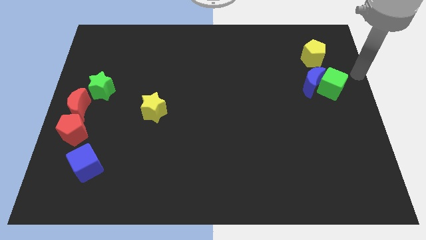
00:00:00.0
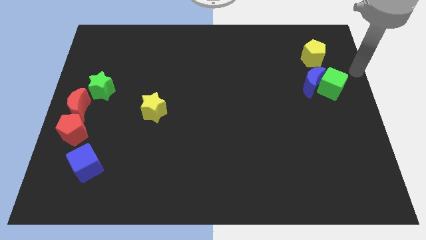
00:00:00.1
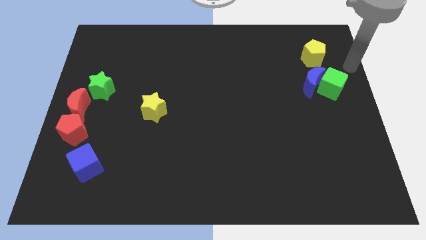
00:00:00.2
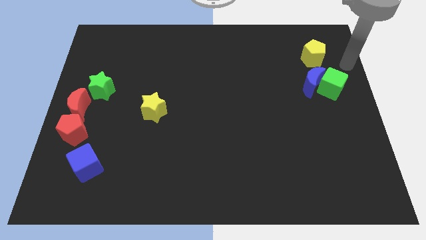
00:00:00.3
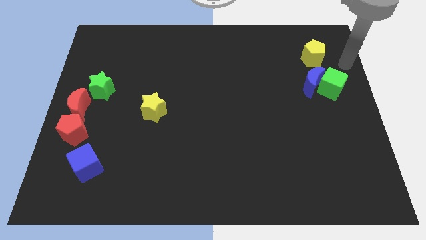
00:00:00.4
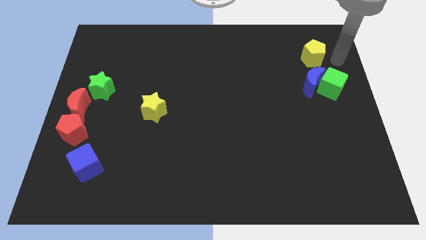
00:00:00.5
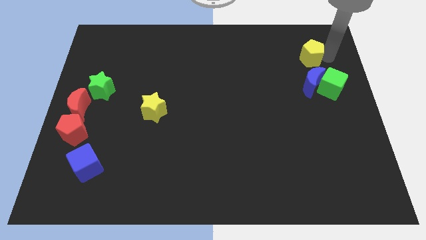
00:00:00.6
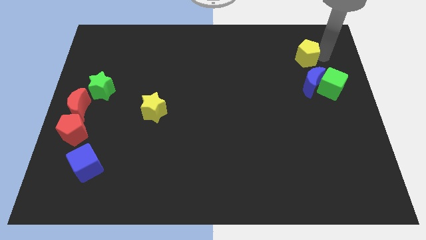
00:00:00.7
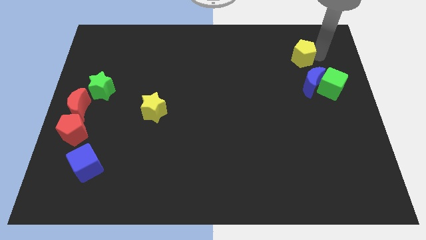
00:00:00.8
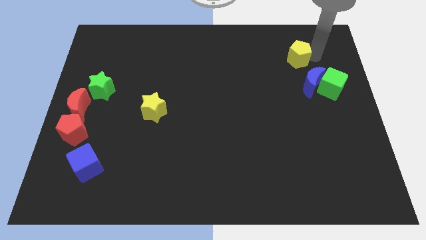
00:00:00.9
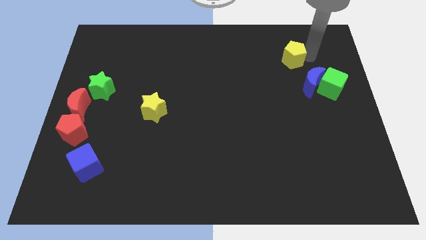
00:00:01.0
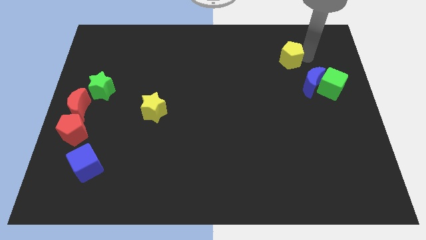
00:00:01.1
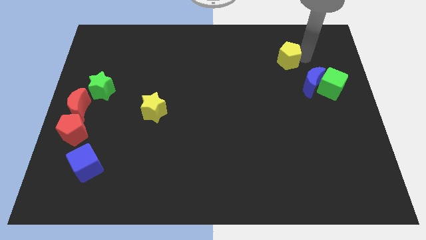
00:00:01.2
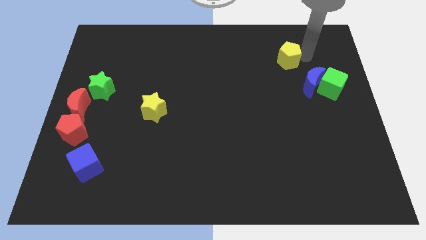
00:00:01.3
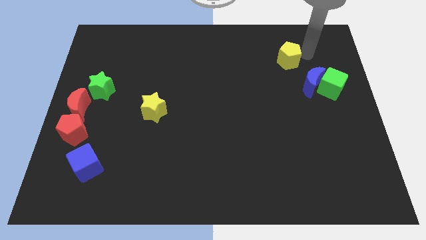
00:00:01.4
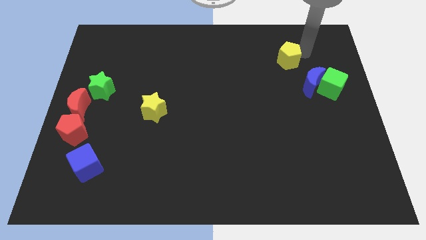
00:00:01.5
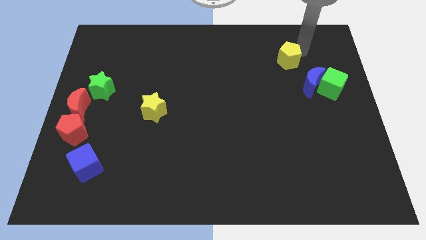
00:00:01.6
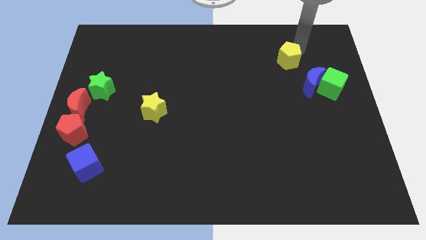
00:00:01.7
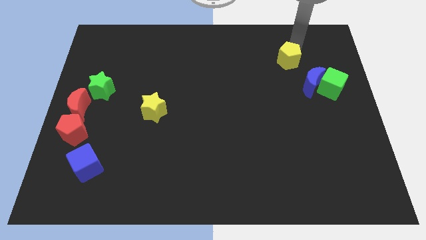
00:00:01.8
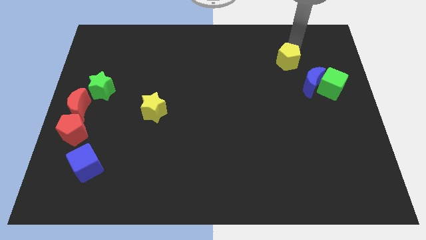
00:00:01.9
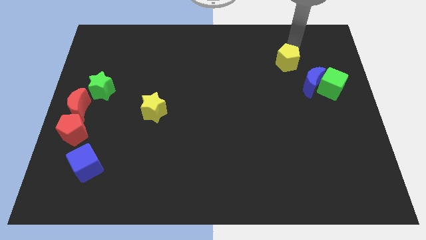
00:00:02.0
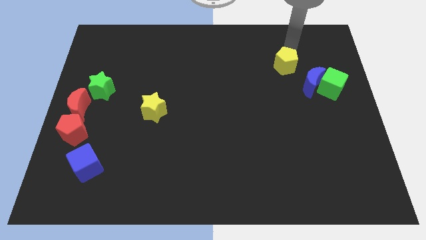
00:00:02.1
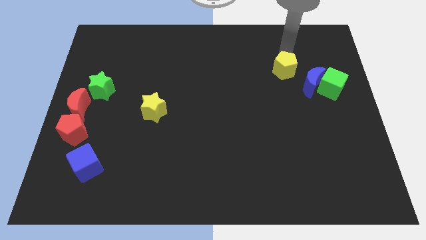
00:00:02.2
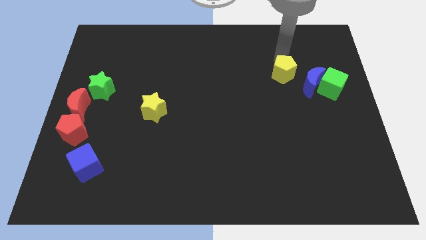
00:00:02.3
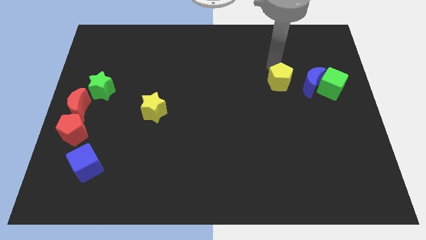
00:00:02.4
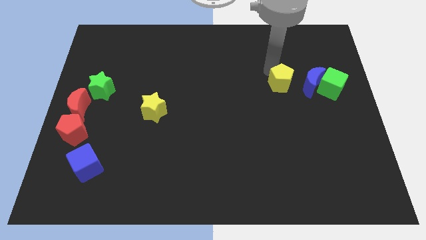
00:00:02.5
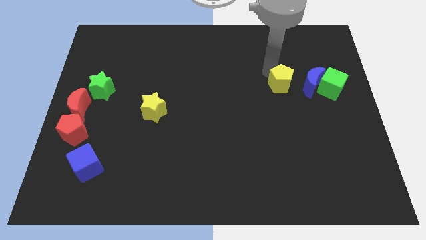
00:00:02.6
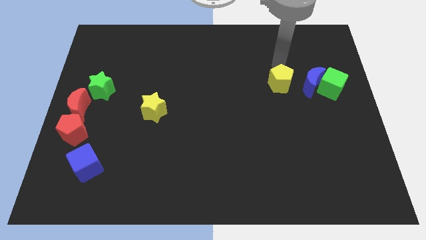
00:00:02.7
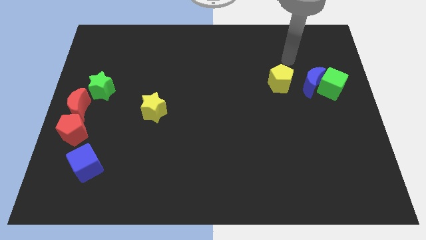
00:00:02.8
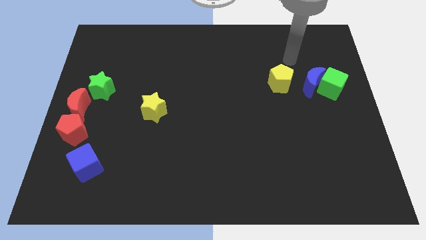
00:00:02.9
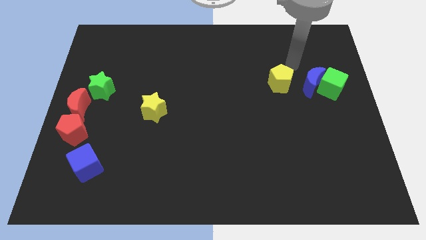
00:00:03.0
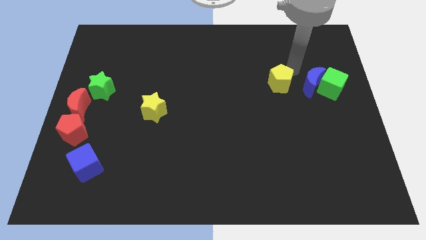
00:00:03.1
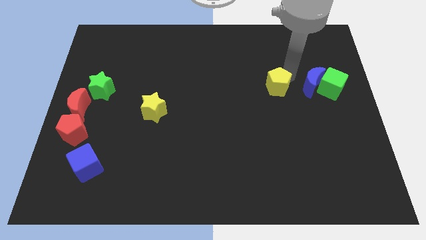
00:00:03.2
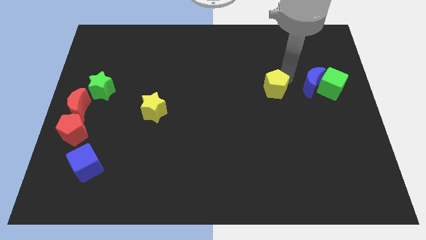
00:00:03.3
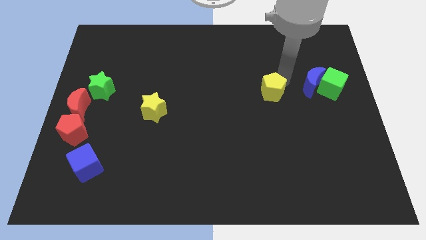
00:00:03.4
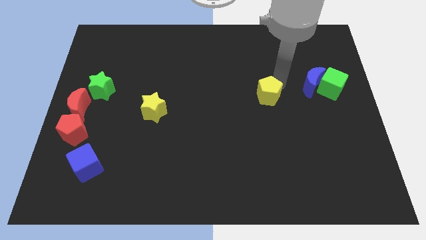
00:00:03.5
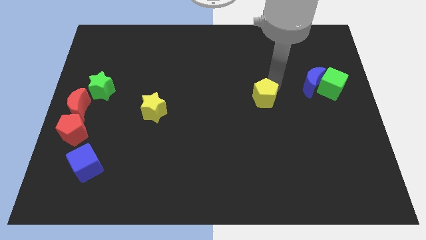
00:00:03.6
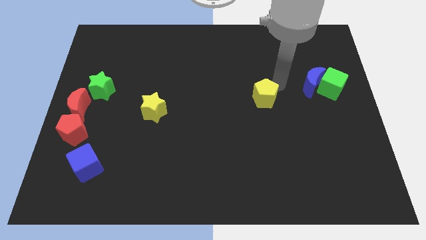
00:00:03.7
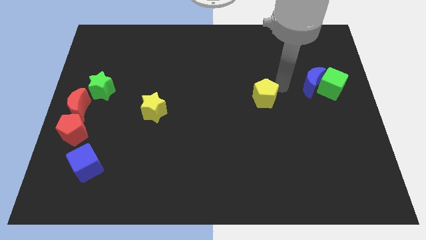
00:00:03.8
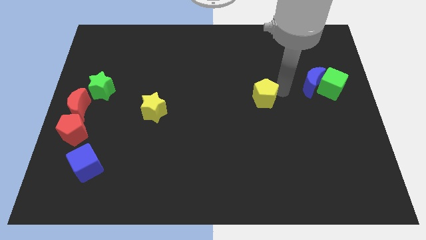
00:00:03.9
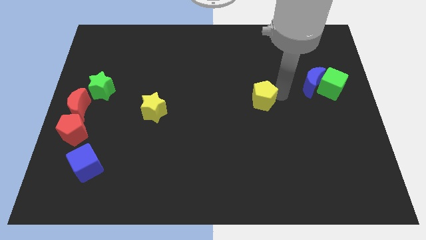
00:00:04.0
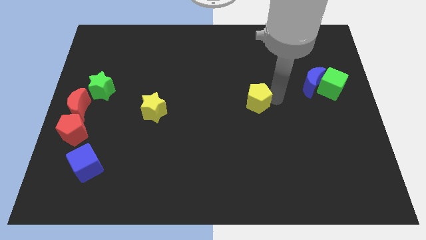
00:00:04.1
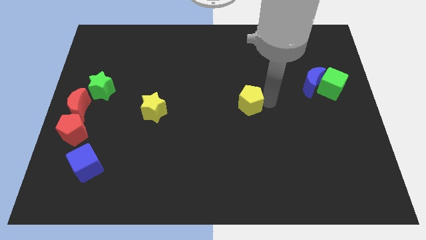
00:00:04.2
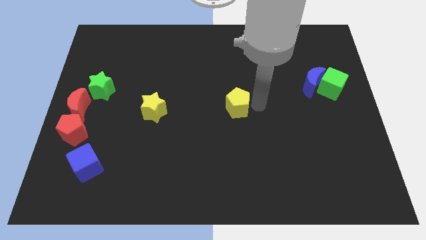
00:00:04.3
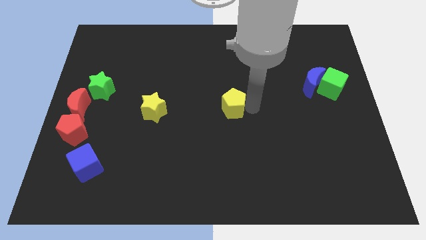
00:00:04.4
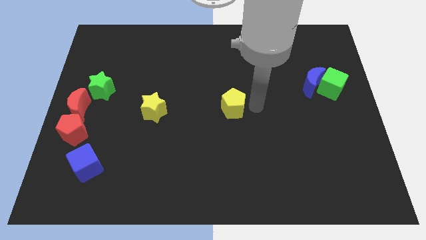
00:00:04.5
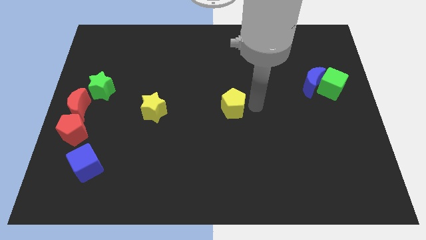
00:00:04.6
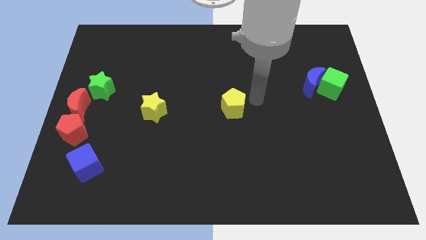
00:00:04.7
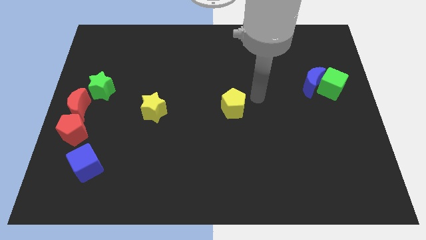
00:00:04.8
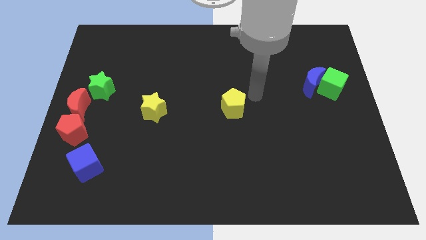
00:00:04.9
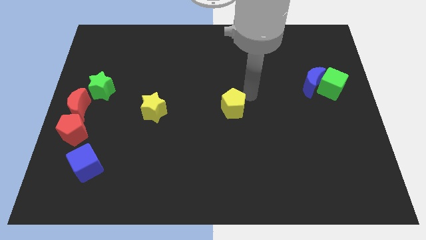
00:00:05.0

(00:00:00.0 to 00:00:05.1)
push the yellow pentagon to the right side of the yellow star

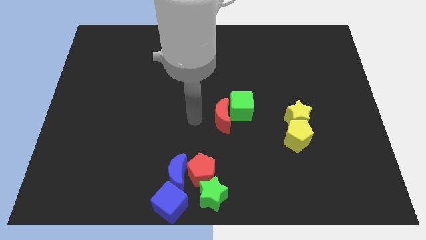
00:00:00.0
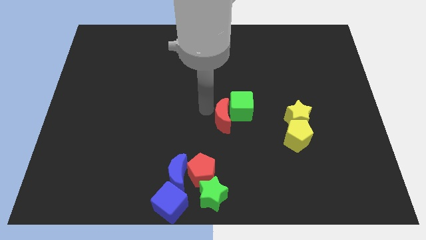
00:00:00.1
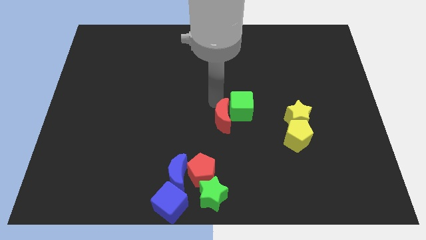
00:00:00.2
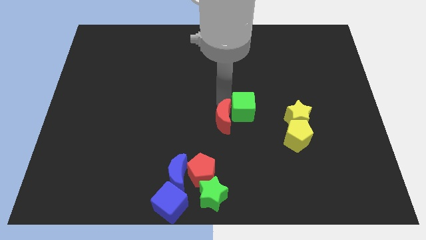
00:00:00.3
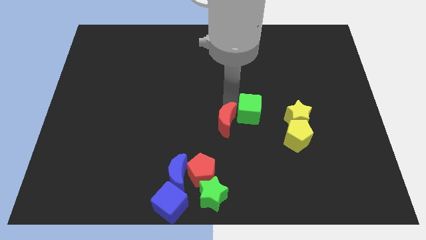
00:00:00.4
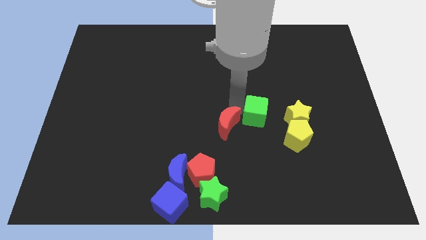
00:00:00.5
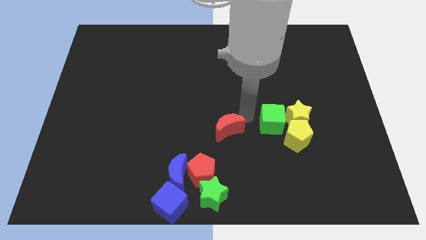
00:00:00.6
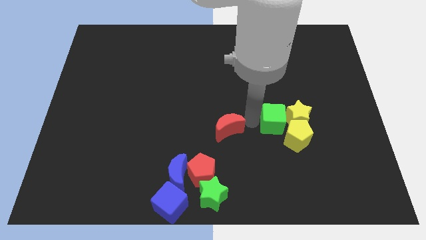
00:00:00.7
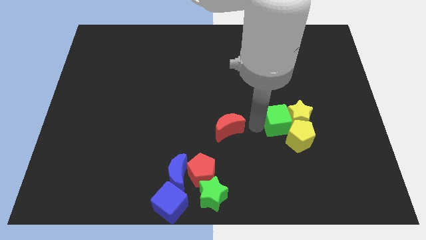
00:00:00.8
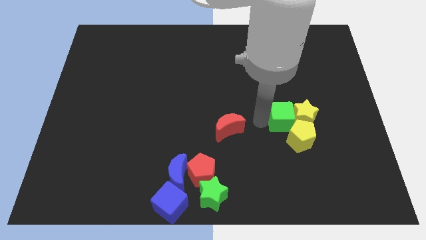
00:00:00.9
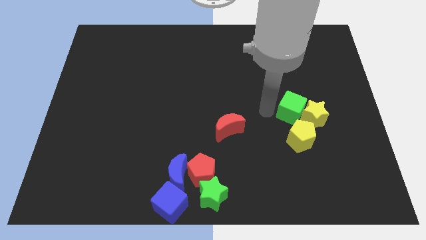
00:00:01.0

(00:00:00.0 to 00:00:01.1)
separate the green cube and red moon

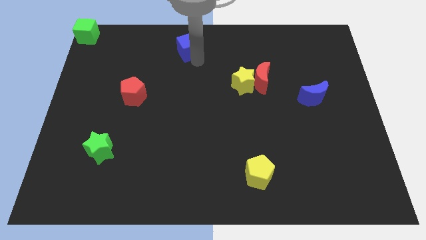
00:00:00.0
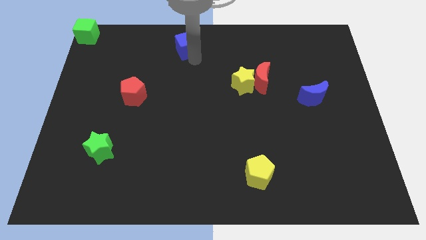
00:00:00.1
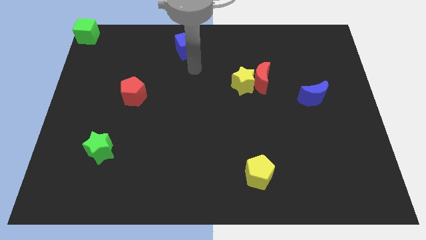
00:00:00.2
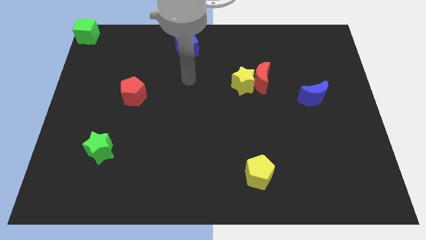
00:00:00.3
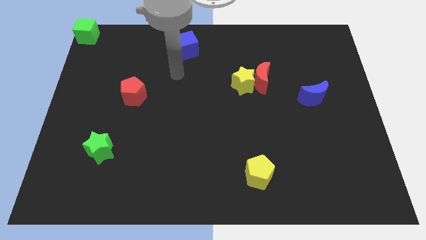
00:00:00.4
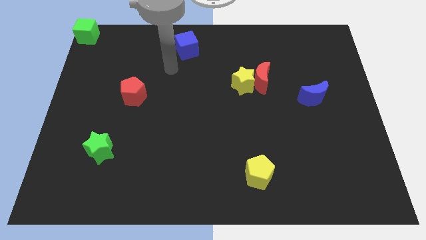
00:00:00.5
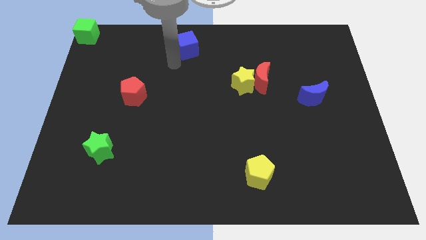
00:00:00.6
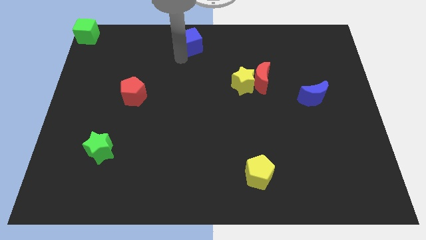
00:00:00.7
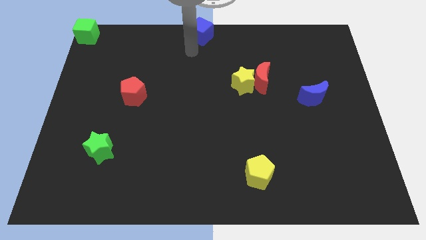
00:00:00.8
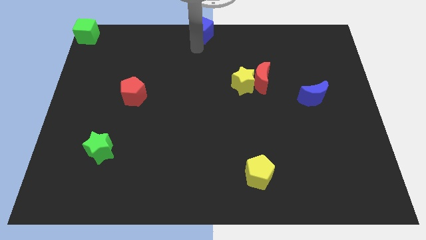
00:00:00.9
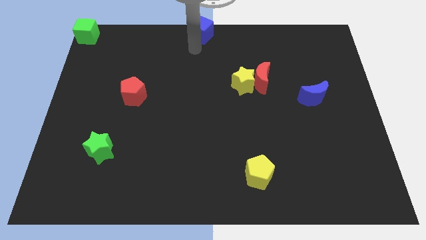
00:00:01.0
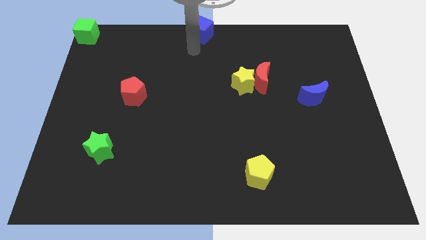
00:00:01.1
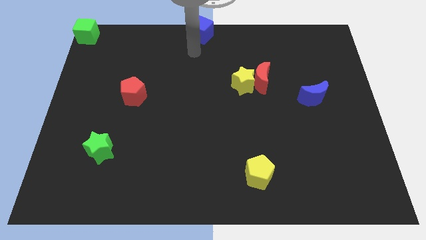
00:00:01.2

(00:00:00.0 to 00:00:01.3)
move the blue cube to the top center of the board

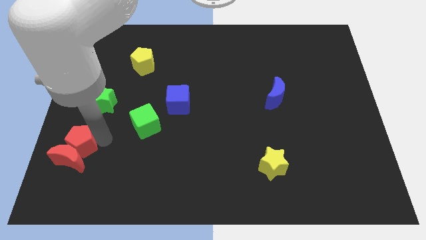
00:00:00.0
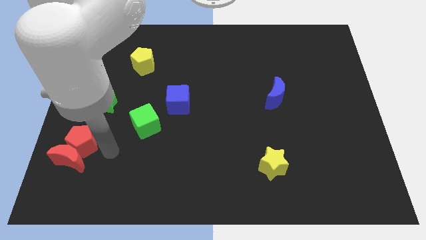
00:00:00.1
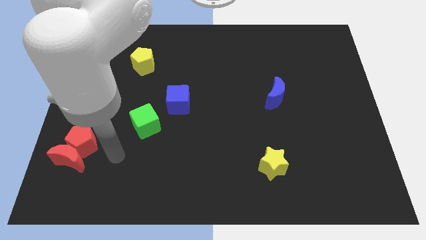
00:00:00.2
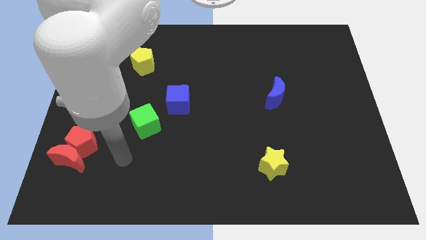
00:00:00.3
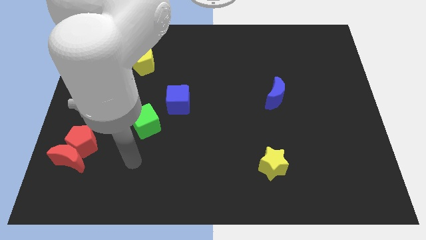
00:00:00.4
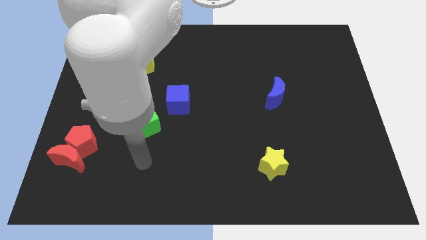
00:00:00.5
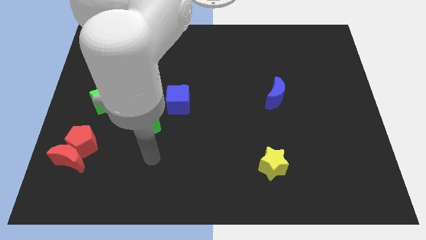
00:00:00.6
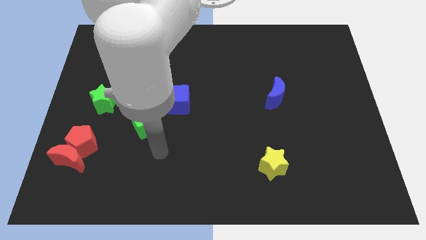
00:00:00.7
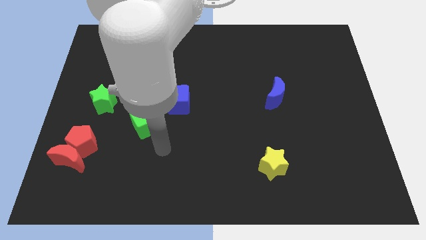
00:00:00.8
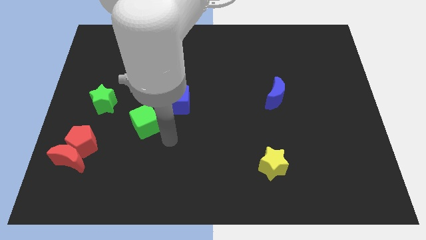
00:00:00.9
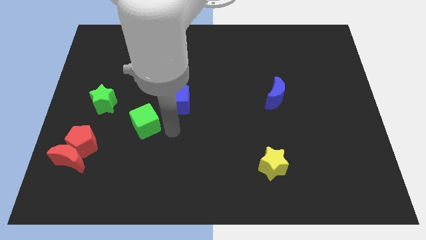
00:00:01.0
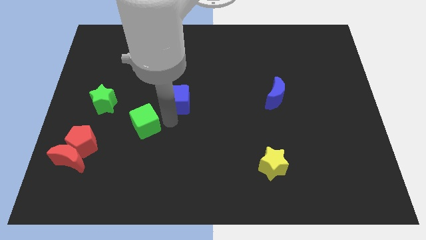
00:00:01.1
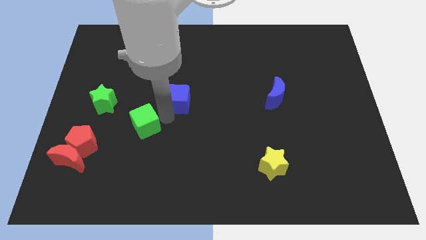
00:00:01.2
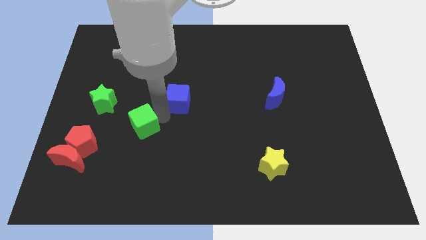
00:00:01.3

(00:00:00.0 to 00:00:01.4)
place your hand in between the green cube and the blue cube

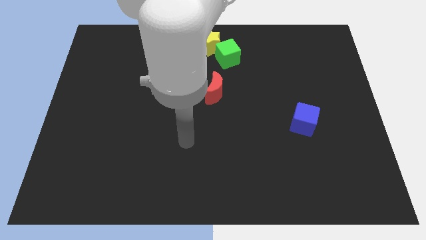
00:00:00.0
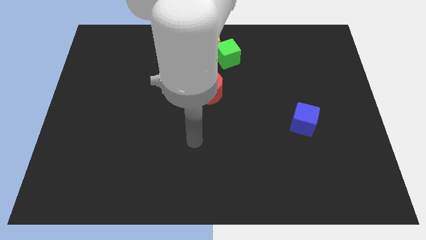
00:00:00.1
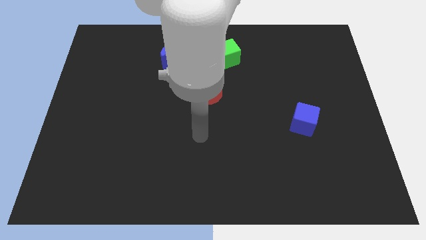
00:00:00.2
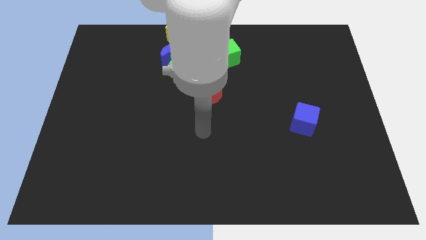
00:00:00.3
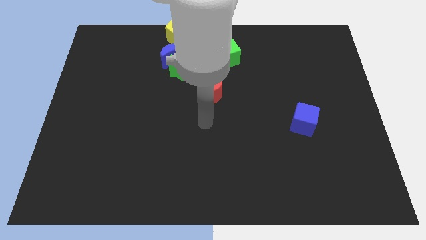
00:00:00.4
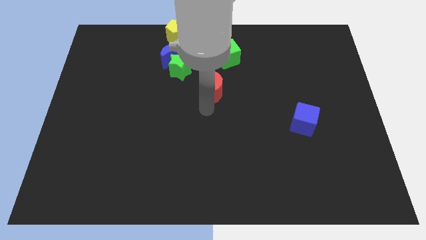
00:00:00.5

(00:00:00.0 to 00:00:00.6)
move your arm close to the red moon
